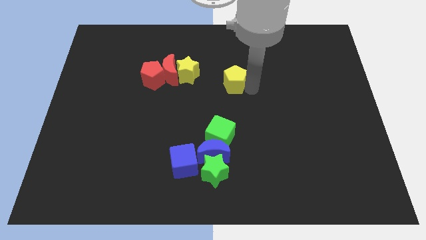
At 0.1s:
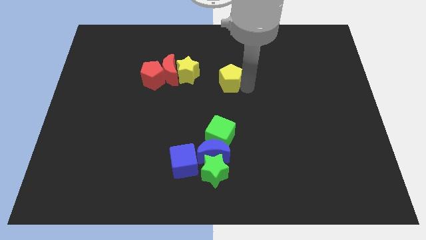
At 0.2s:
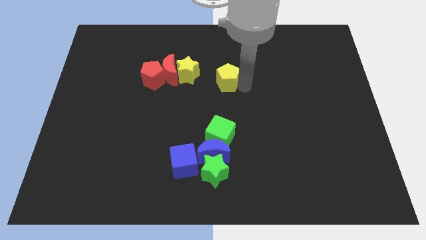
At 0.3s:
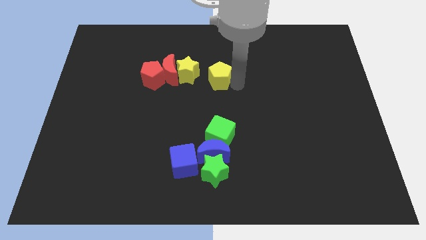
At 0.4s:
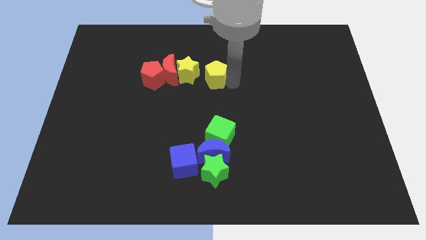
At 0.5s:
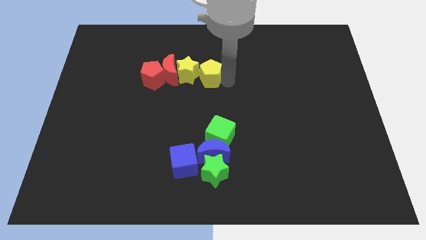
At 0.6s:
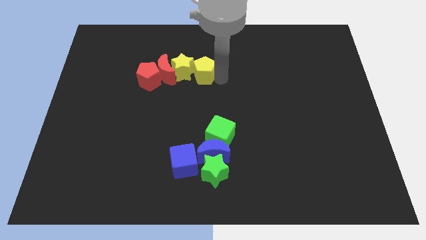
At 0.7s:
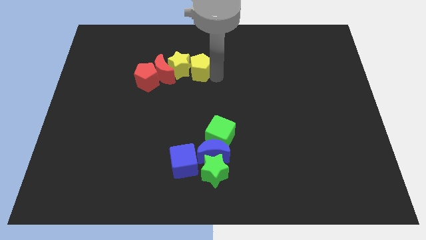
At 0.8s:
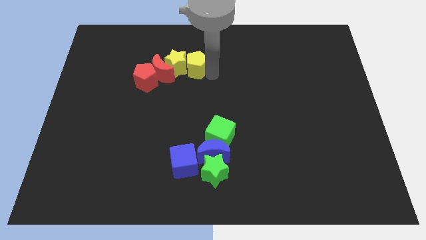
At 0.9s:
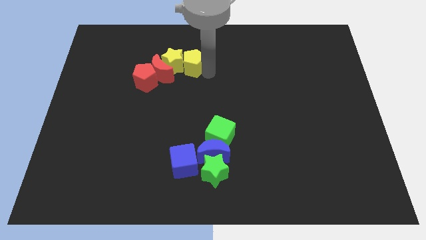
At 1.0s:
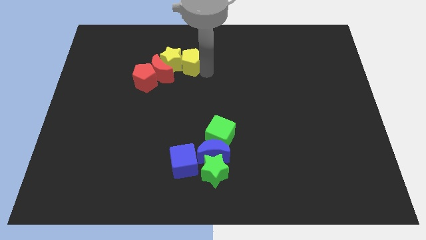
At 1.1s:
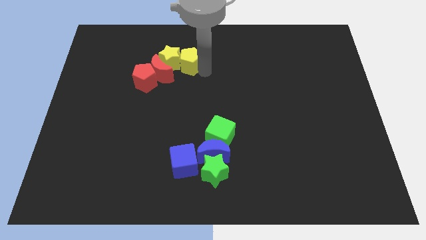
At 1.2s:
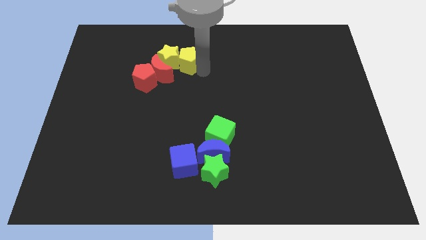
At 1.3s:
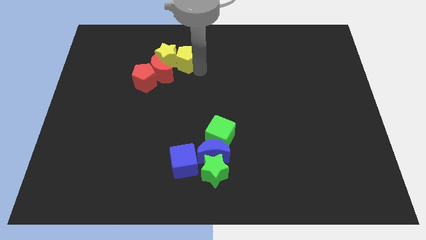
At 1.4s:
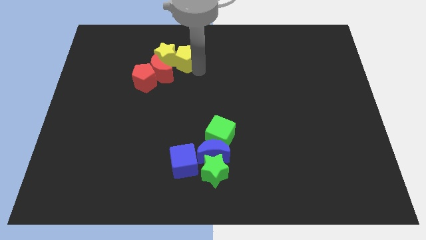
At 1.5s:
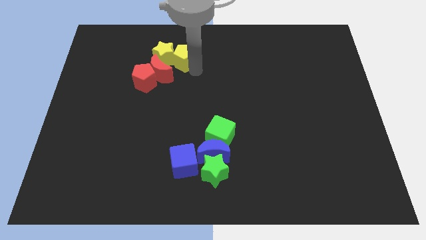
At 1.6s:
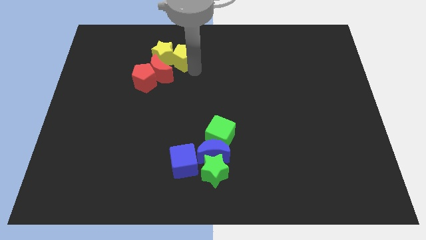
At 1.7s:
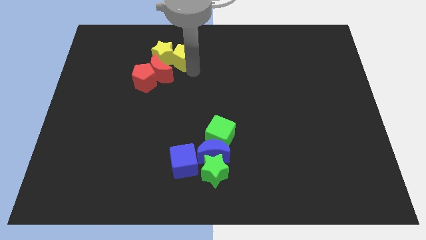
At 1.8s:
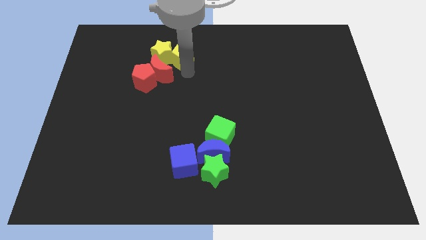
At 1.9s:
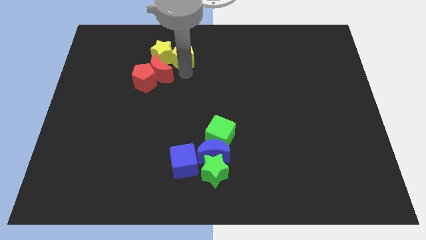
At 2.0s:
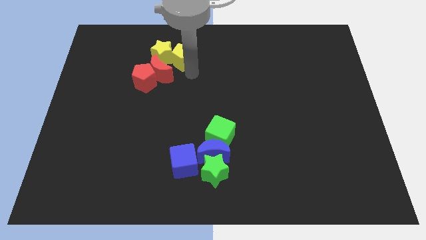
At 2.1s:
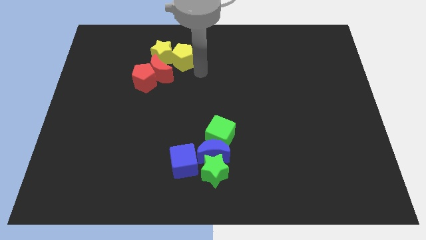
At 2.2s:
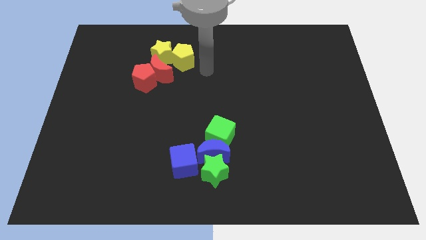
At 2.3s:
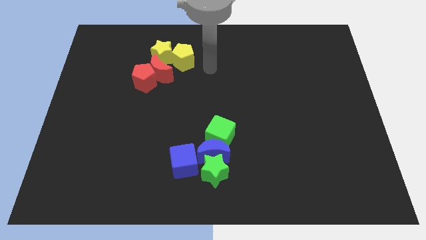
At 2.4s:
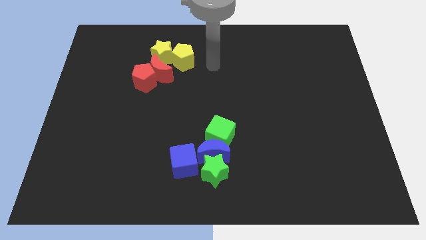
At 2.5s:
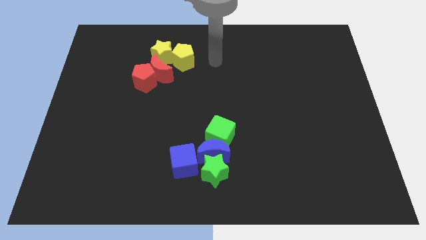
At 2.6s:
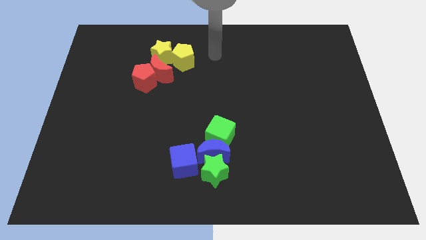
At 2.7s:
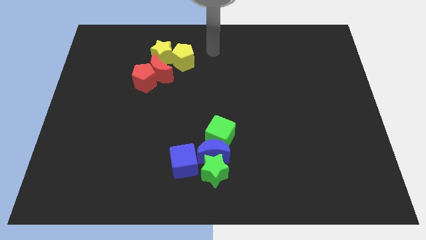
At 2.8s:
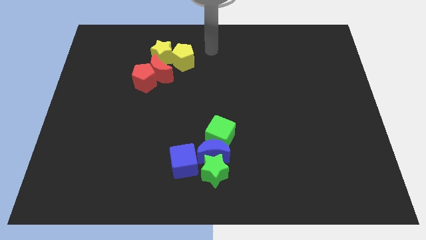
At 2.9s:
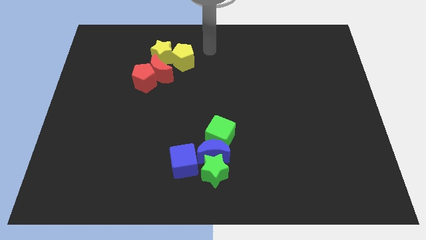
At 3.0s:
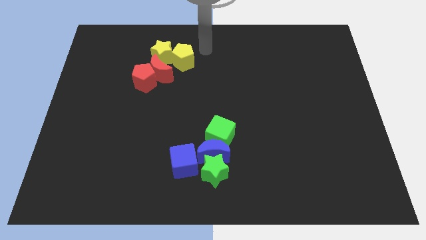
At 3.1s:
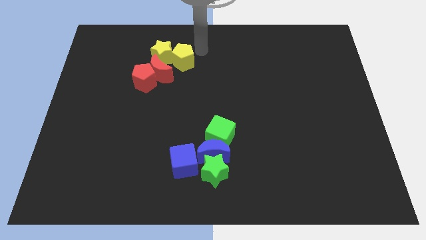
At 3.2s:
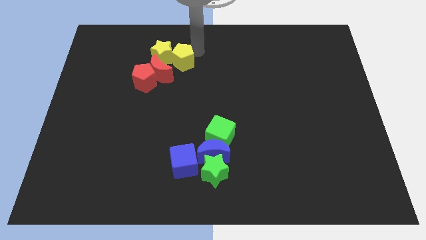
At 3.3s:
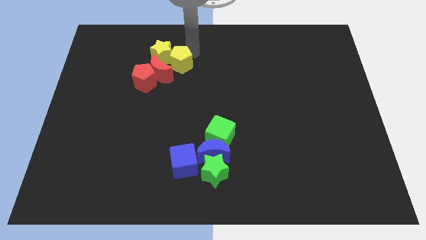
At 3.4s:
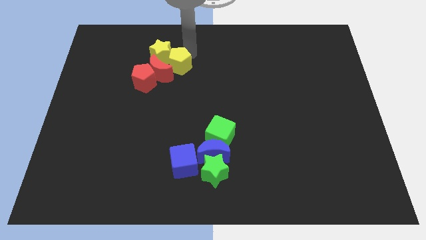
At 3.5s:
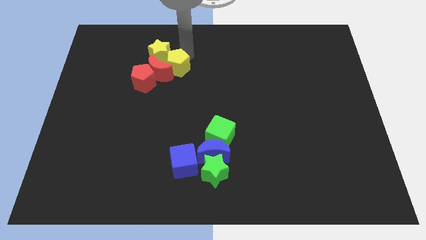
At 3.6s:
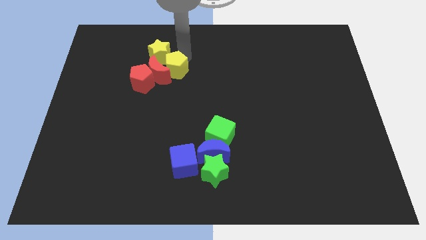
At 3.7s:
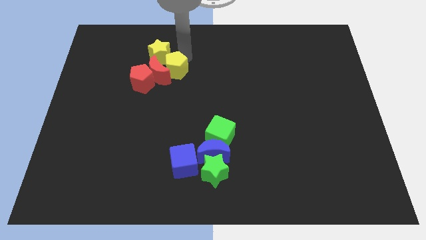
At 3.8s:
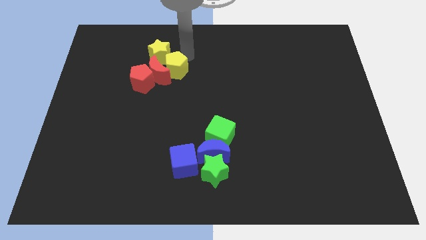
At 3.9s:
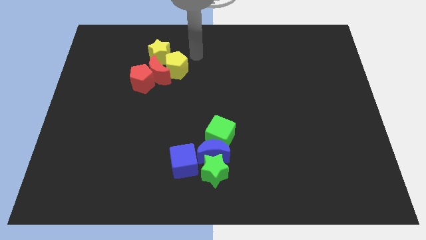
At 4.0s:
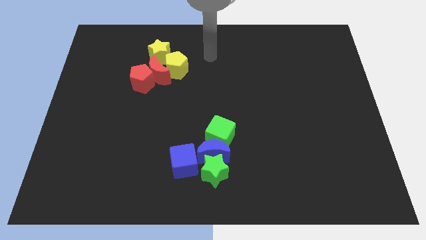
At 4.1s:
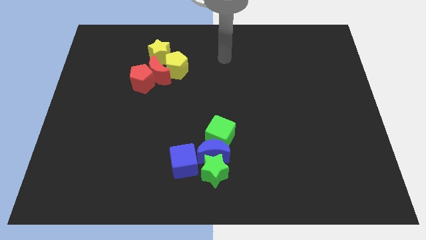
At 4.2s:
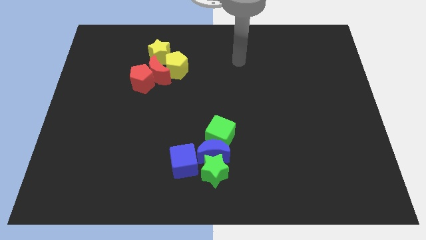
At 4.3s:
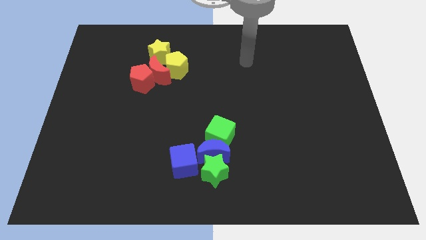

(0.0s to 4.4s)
push the yellow pentagon into the yellow star

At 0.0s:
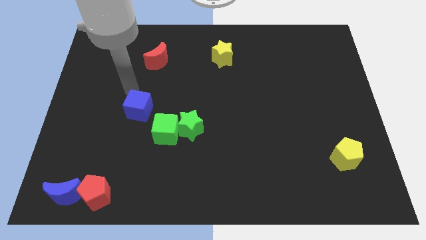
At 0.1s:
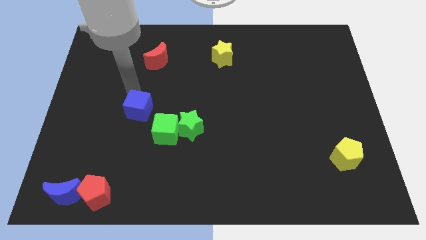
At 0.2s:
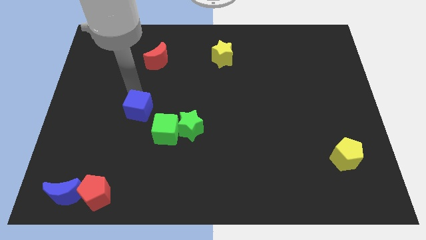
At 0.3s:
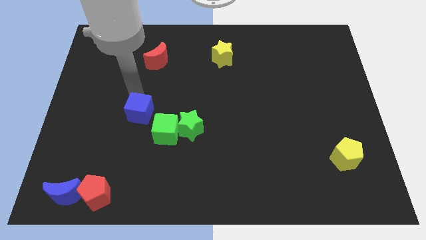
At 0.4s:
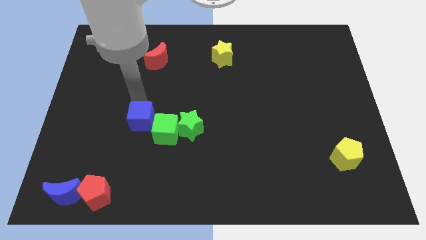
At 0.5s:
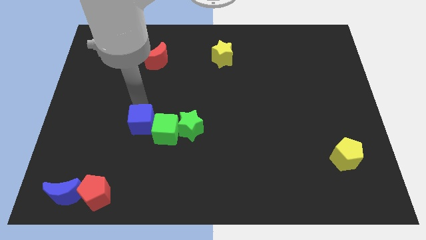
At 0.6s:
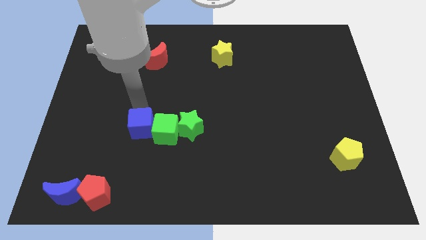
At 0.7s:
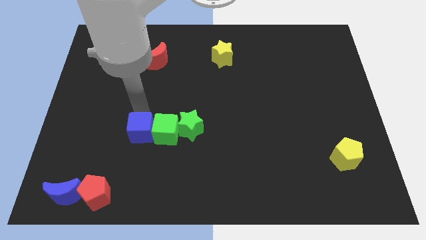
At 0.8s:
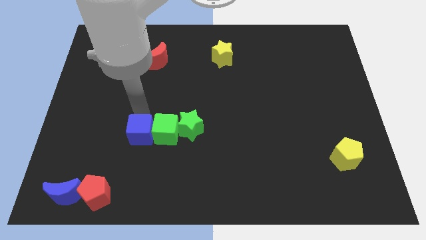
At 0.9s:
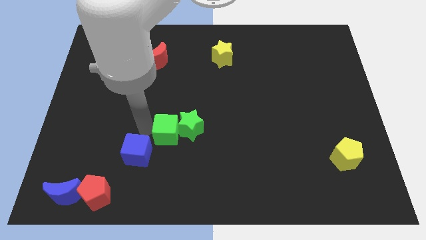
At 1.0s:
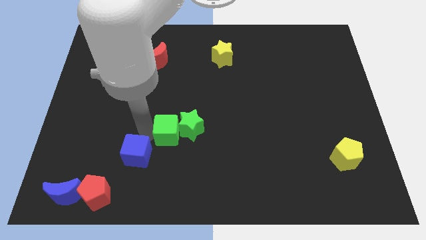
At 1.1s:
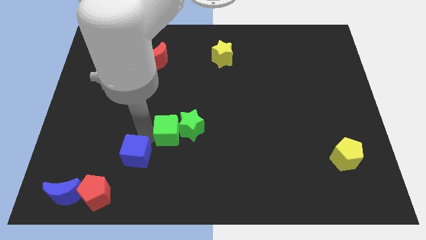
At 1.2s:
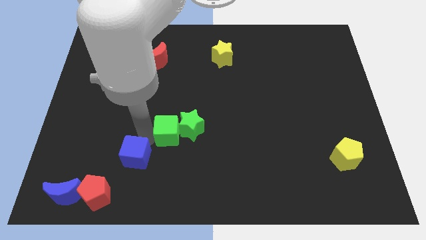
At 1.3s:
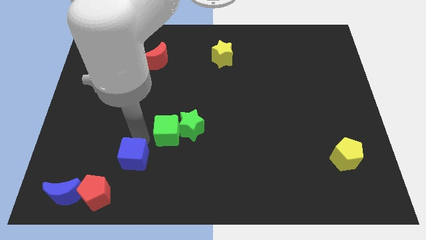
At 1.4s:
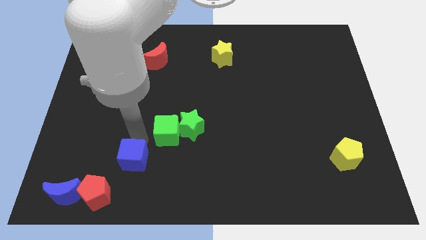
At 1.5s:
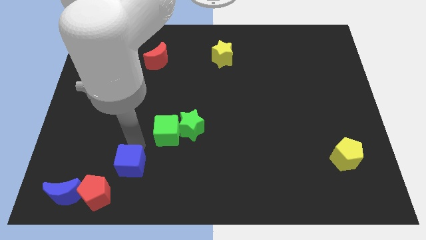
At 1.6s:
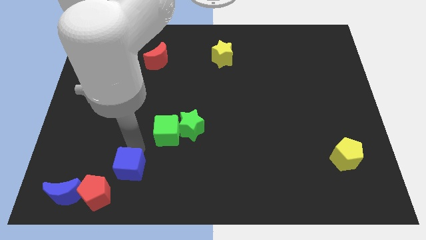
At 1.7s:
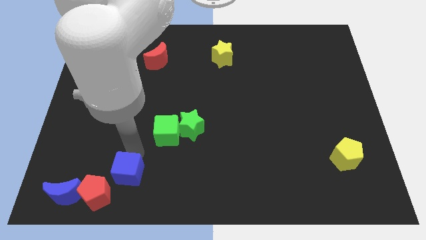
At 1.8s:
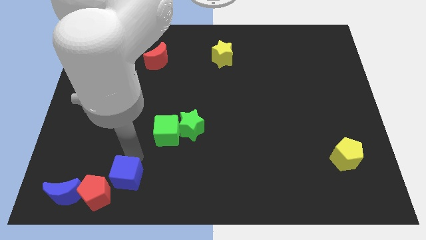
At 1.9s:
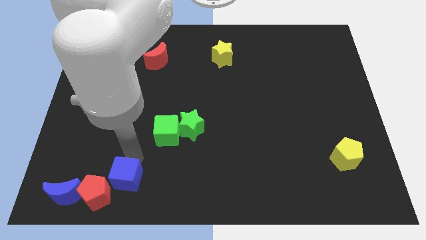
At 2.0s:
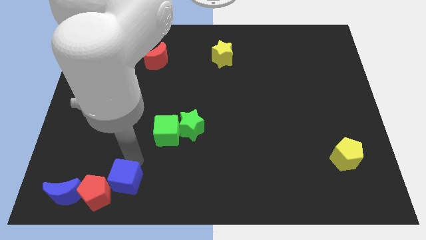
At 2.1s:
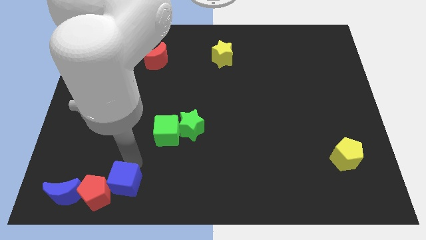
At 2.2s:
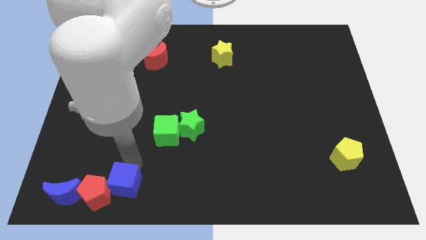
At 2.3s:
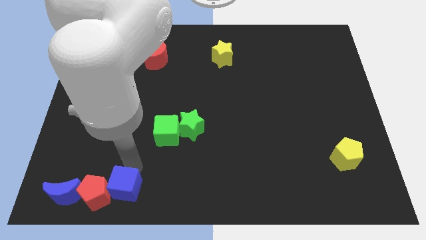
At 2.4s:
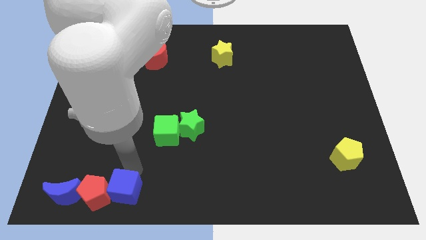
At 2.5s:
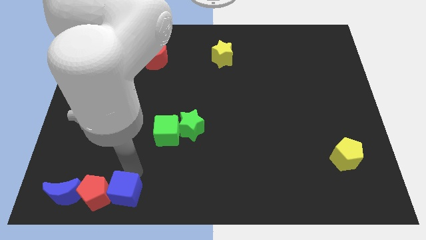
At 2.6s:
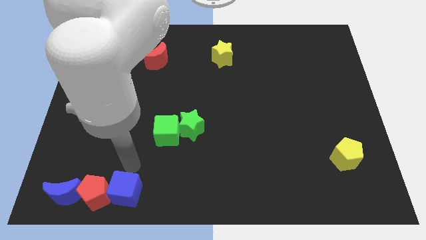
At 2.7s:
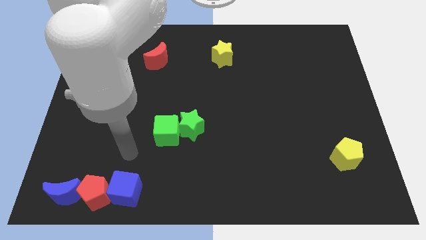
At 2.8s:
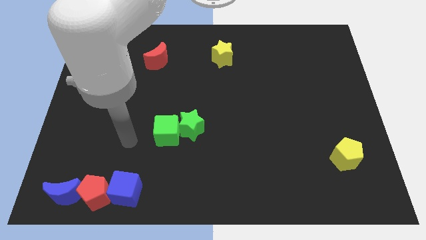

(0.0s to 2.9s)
move the bleu cube to the right of red pentagon

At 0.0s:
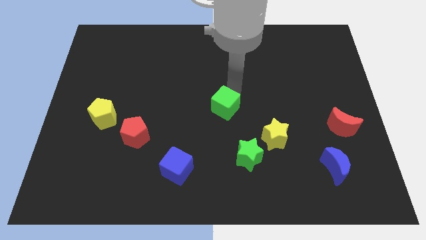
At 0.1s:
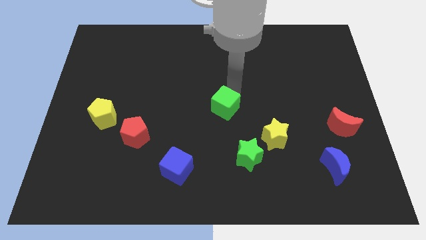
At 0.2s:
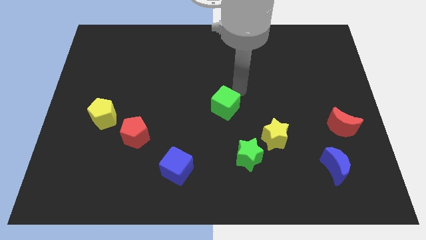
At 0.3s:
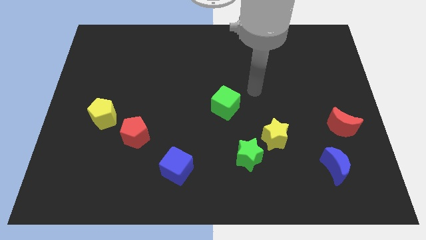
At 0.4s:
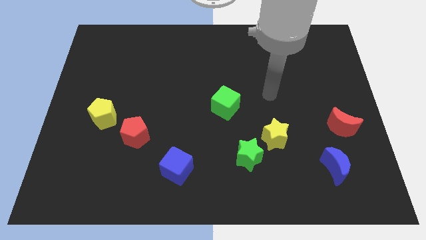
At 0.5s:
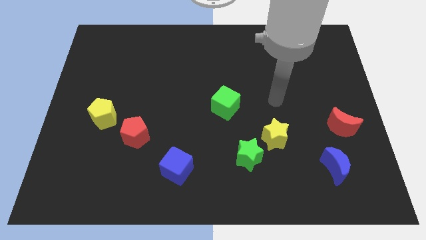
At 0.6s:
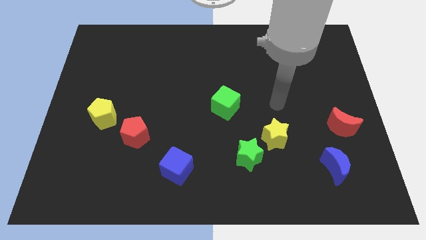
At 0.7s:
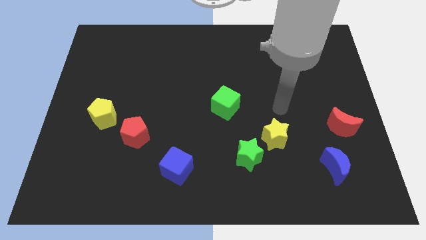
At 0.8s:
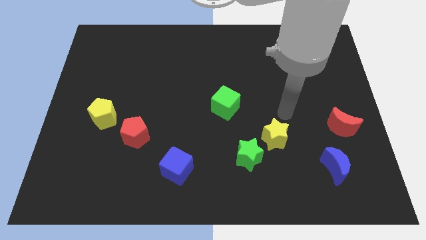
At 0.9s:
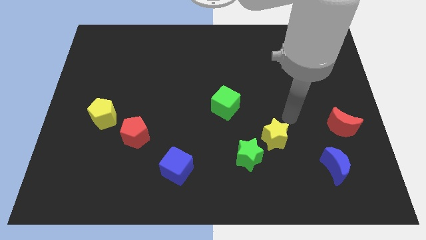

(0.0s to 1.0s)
move the arm away from the green cube

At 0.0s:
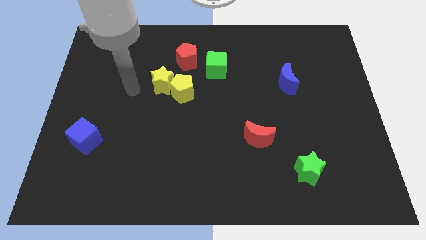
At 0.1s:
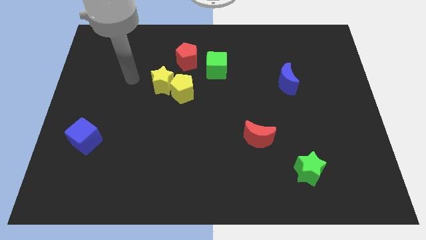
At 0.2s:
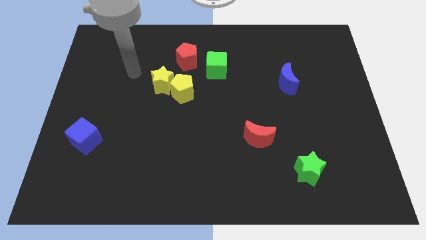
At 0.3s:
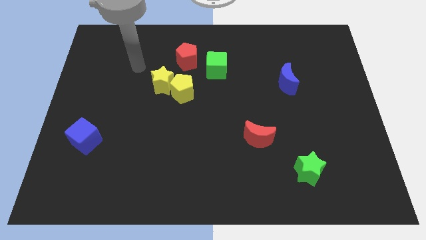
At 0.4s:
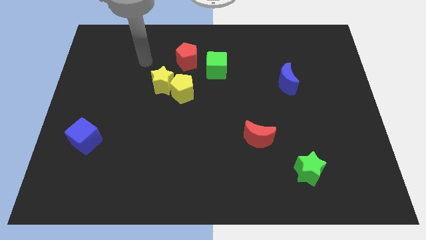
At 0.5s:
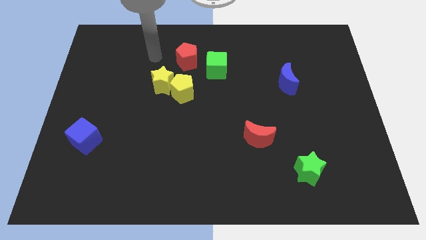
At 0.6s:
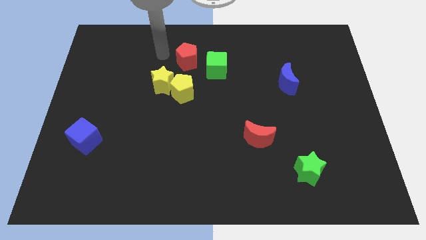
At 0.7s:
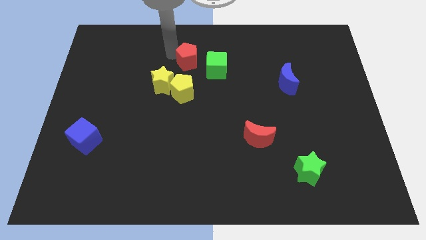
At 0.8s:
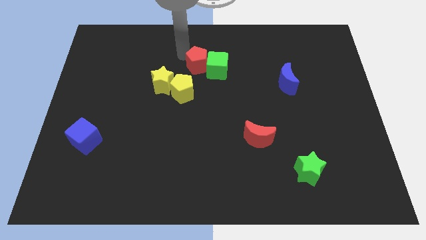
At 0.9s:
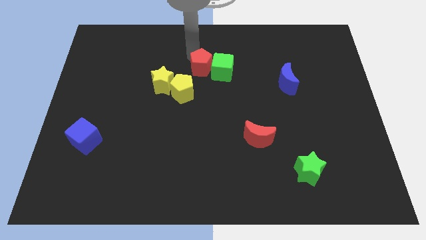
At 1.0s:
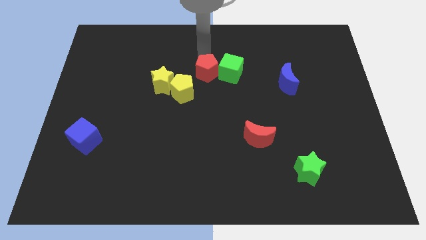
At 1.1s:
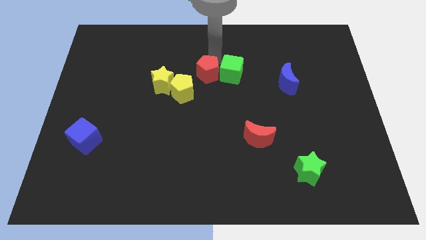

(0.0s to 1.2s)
push red pentagon in to green cube
